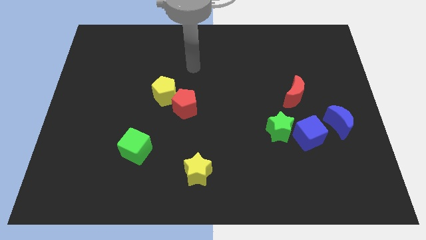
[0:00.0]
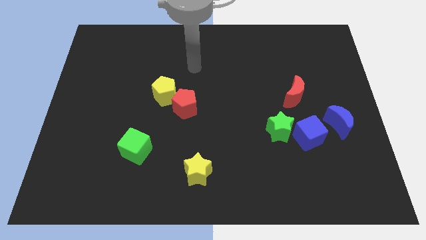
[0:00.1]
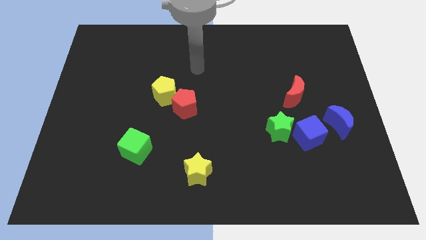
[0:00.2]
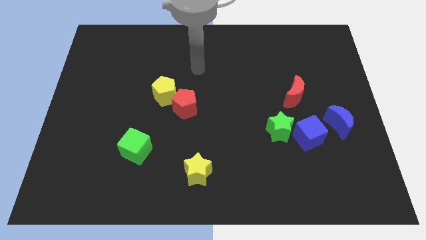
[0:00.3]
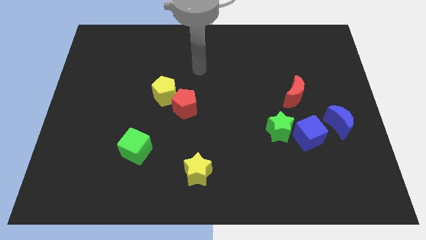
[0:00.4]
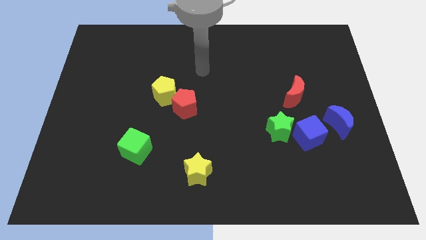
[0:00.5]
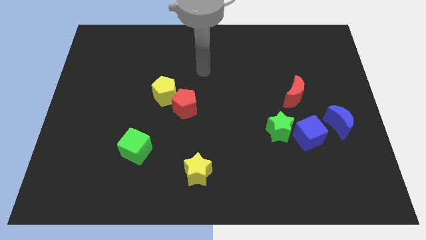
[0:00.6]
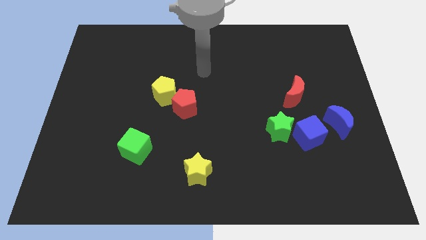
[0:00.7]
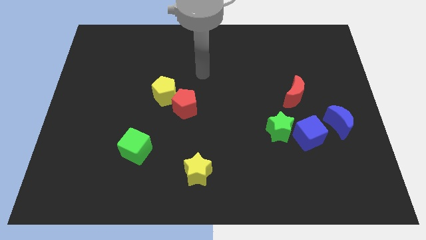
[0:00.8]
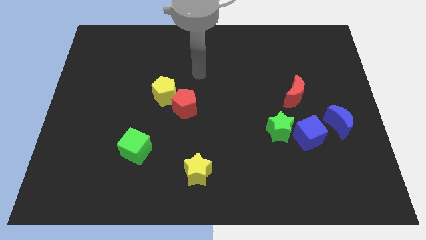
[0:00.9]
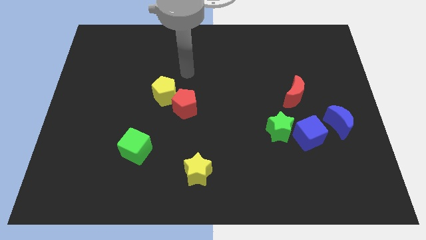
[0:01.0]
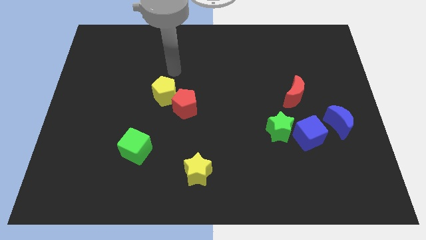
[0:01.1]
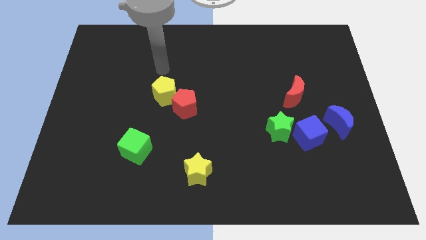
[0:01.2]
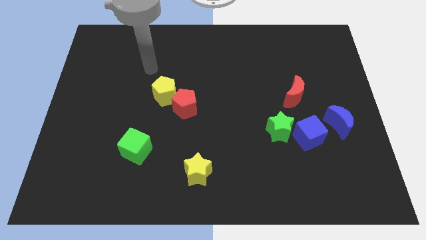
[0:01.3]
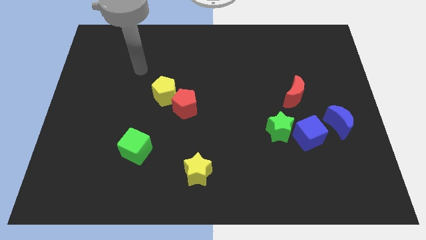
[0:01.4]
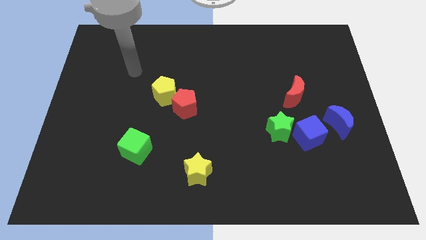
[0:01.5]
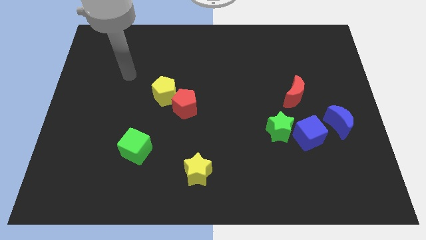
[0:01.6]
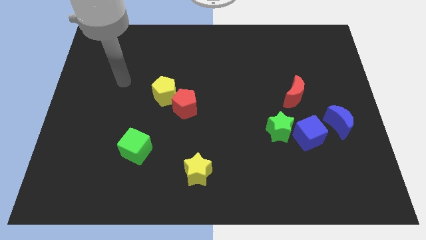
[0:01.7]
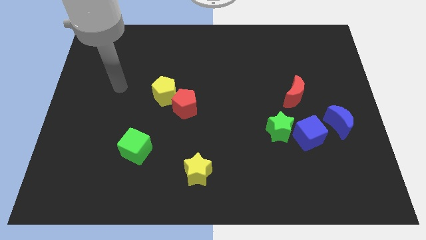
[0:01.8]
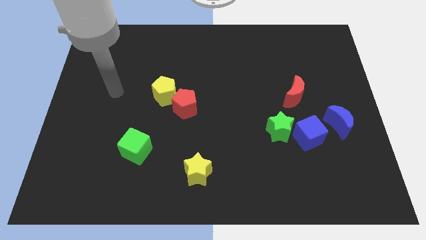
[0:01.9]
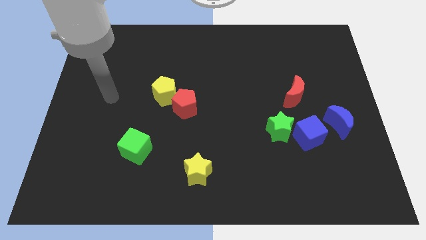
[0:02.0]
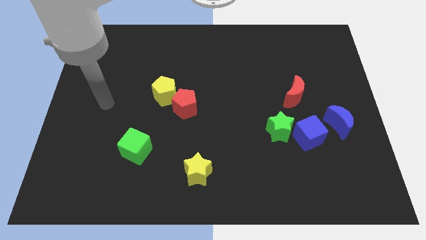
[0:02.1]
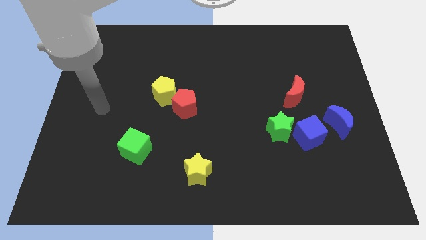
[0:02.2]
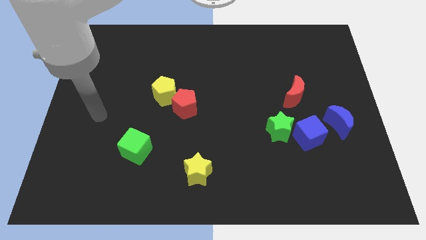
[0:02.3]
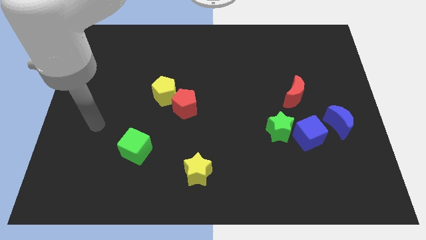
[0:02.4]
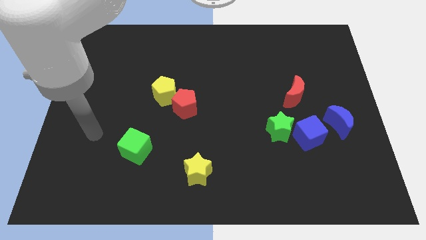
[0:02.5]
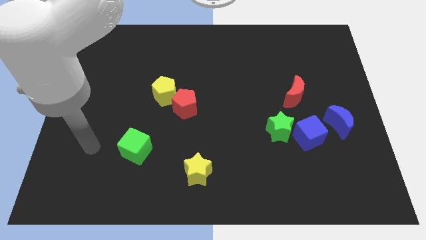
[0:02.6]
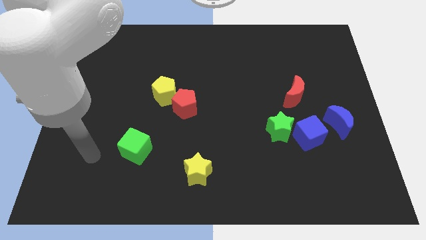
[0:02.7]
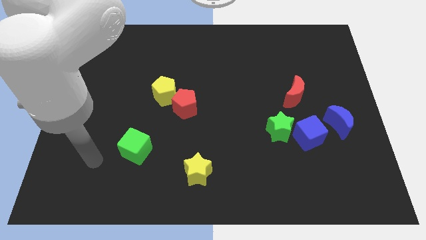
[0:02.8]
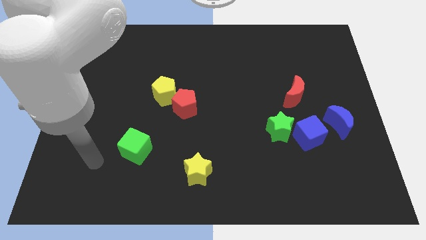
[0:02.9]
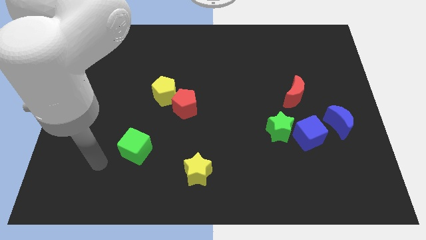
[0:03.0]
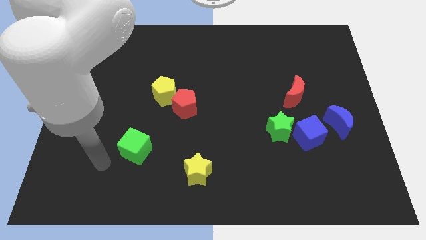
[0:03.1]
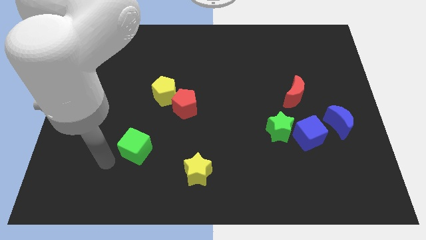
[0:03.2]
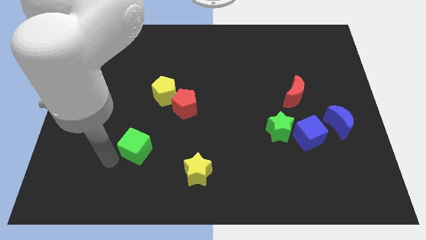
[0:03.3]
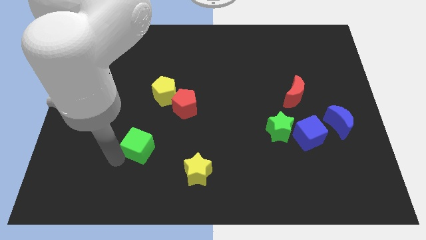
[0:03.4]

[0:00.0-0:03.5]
move your arm towards green cube

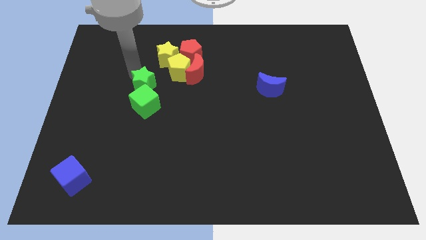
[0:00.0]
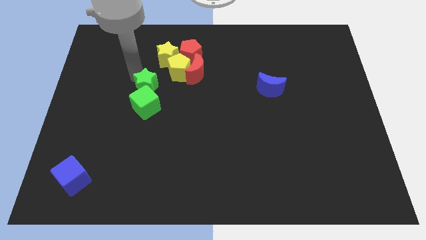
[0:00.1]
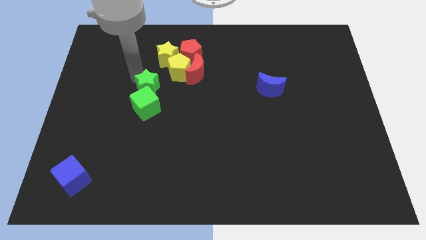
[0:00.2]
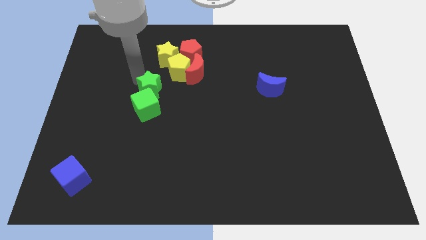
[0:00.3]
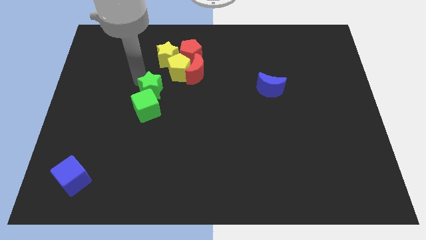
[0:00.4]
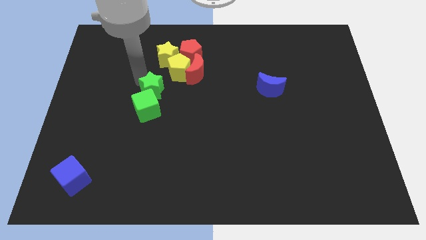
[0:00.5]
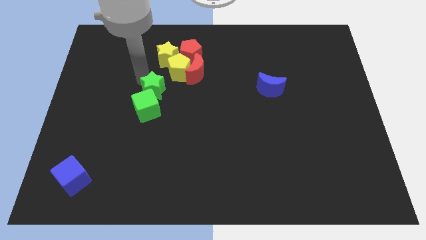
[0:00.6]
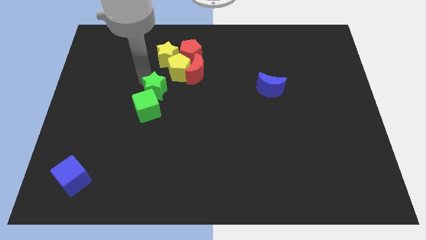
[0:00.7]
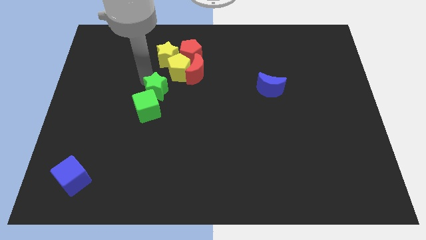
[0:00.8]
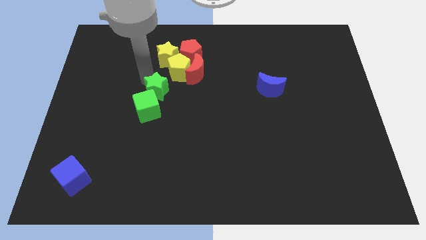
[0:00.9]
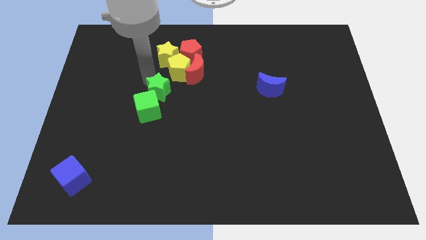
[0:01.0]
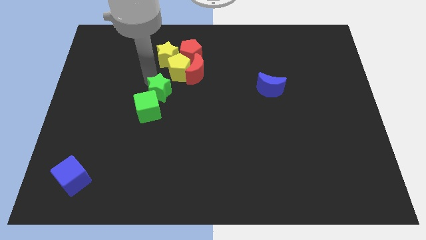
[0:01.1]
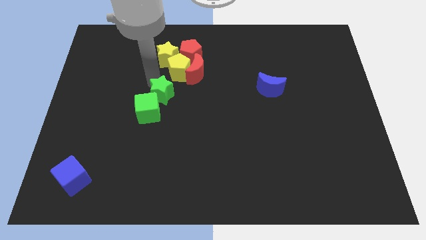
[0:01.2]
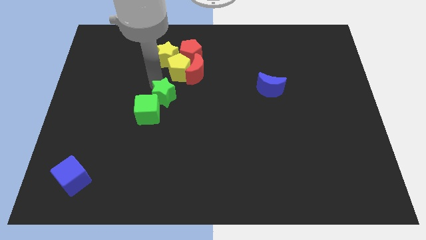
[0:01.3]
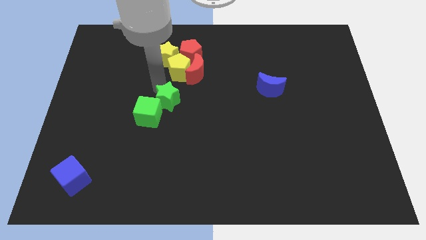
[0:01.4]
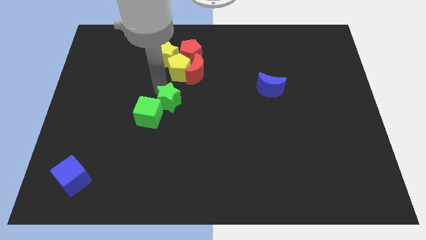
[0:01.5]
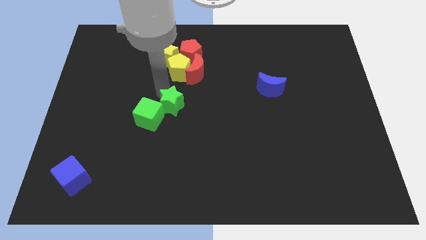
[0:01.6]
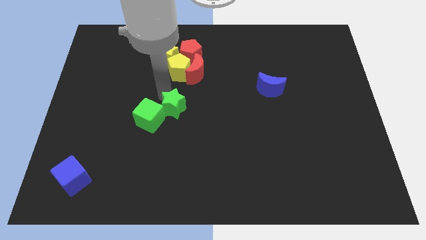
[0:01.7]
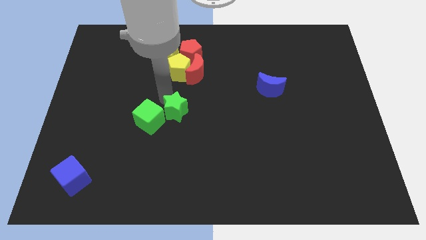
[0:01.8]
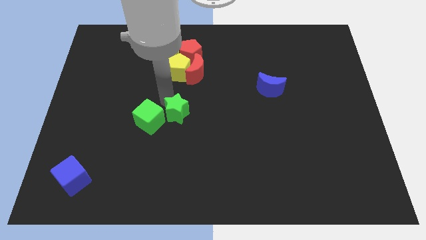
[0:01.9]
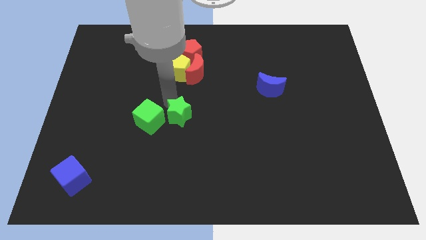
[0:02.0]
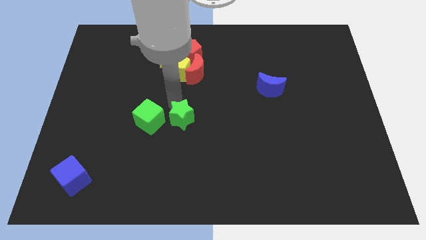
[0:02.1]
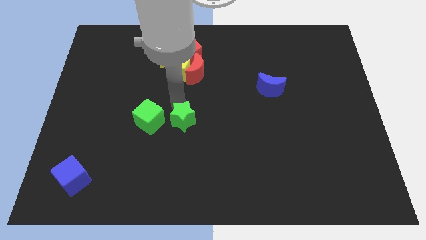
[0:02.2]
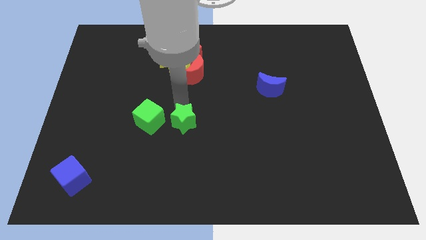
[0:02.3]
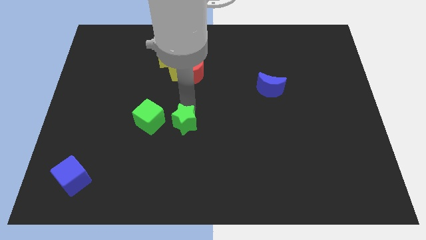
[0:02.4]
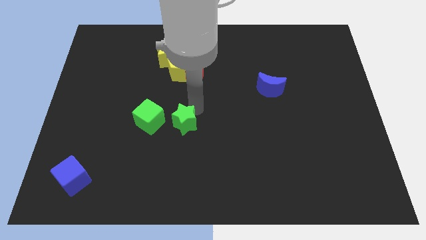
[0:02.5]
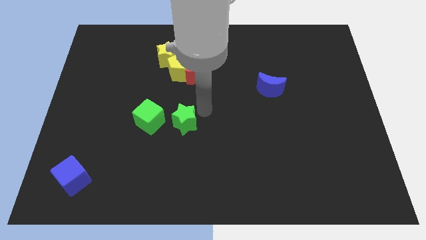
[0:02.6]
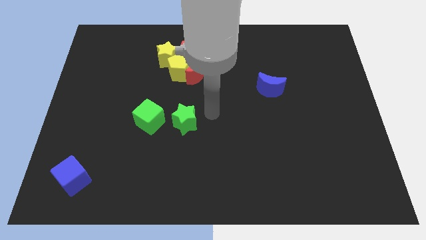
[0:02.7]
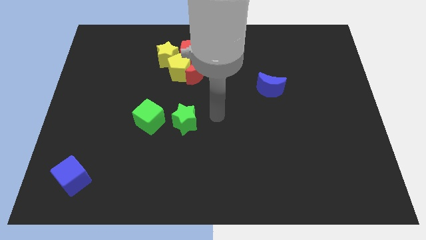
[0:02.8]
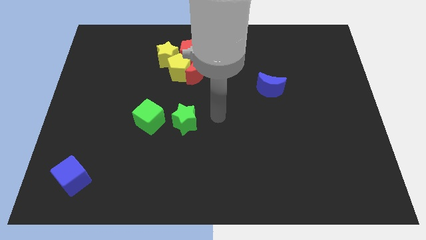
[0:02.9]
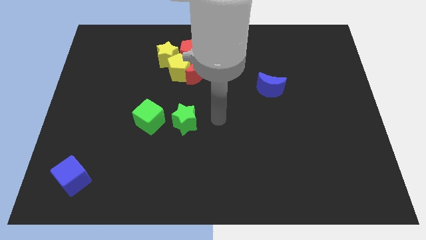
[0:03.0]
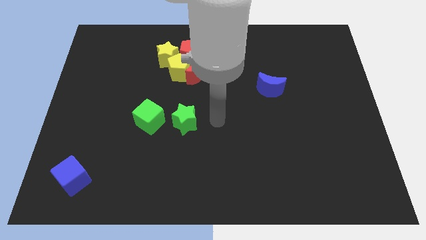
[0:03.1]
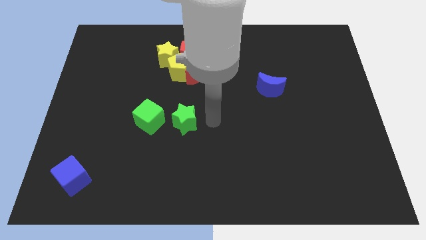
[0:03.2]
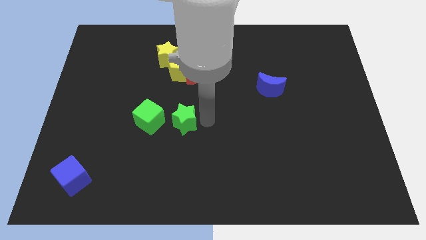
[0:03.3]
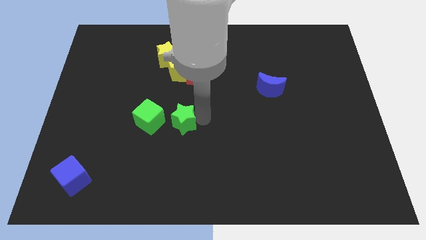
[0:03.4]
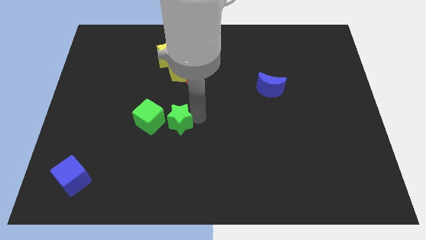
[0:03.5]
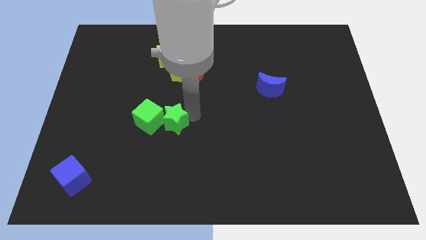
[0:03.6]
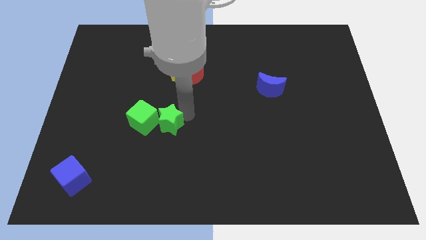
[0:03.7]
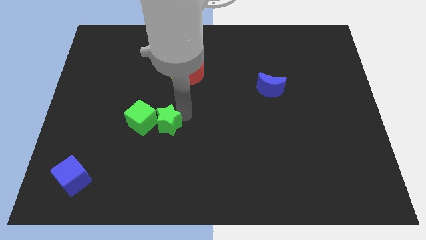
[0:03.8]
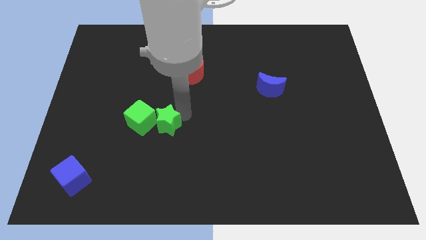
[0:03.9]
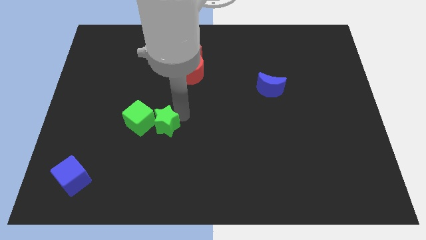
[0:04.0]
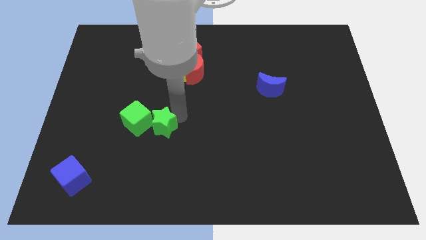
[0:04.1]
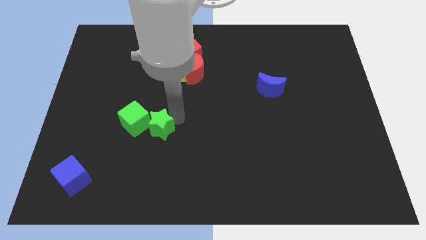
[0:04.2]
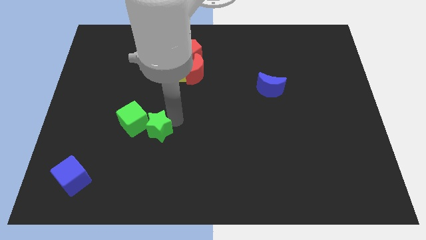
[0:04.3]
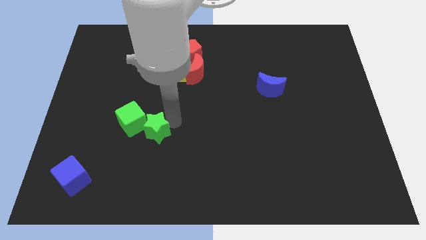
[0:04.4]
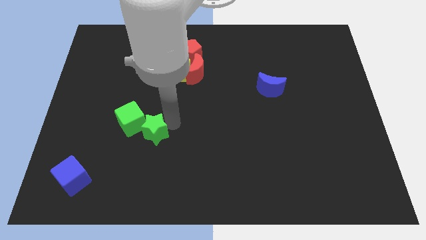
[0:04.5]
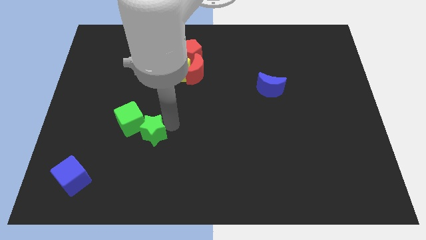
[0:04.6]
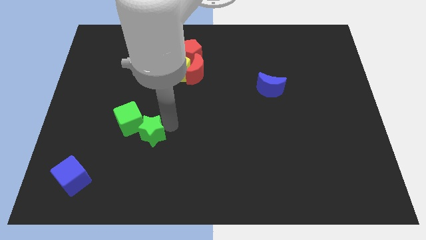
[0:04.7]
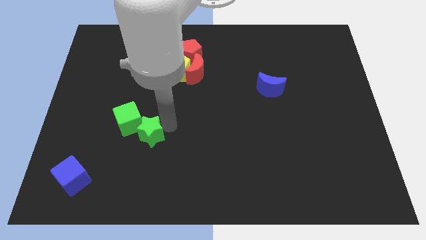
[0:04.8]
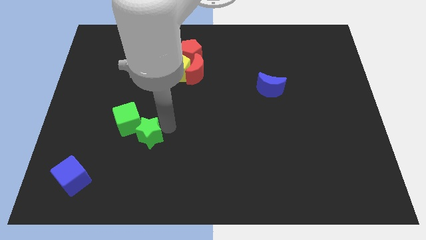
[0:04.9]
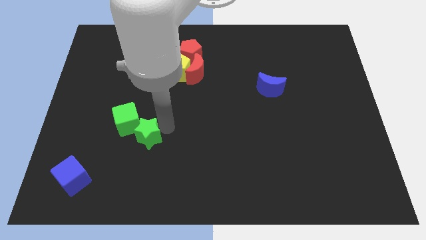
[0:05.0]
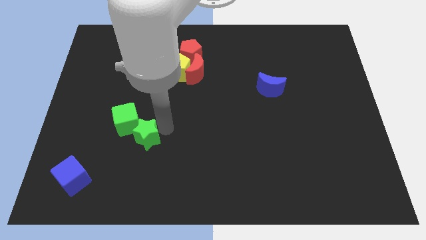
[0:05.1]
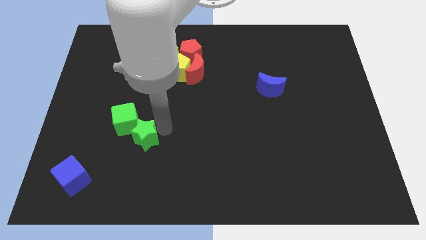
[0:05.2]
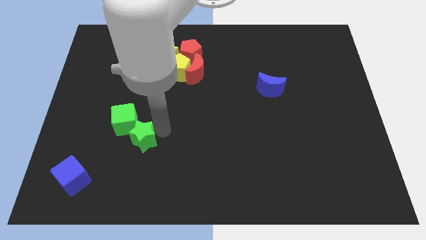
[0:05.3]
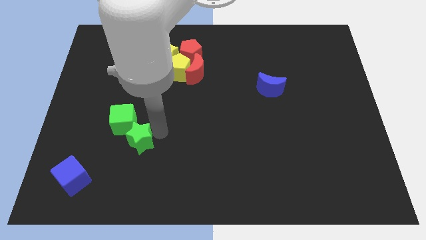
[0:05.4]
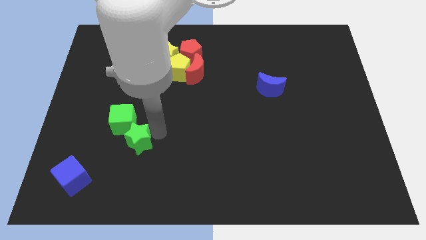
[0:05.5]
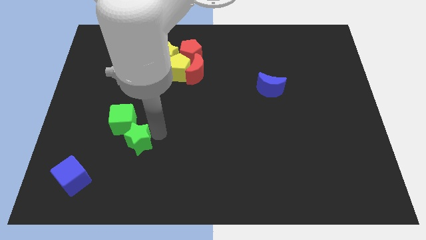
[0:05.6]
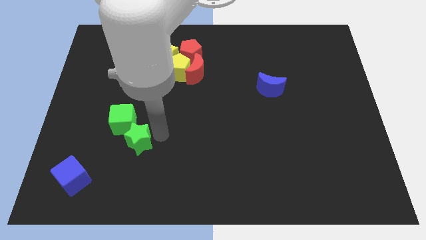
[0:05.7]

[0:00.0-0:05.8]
push the green star towards the green cube
